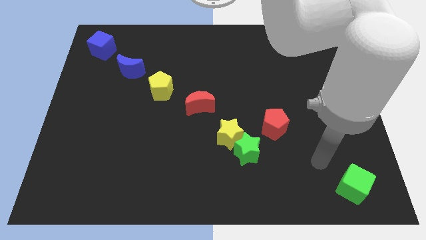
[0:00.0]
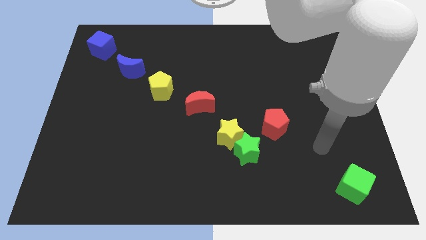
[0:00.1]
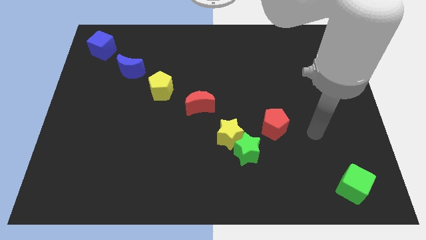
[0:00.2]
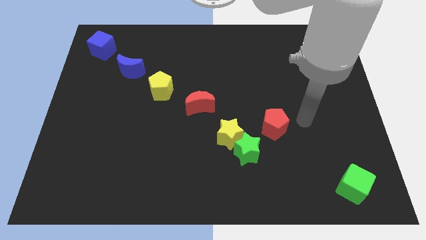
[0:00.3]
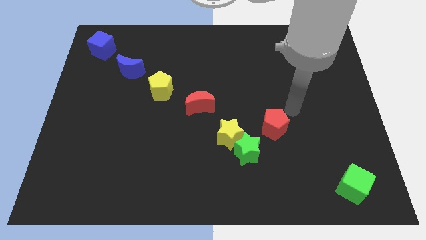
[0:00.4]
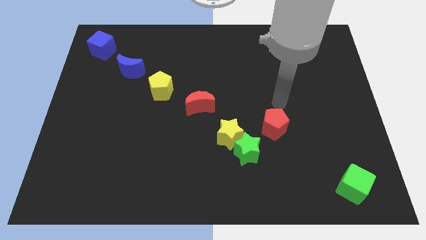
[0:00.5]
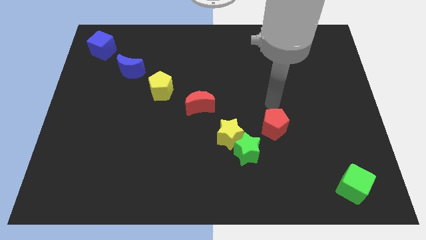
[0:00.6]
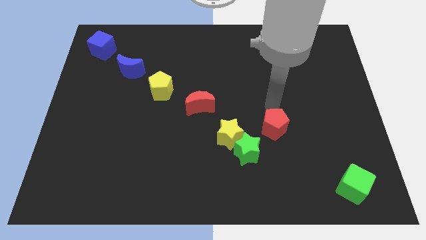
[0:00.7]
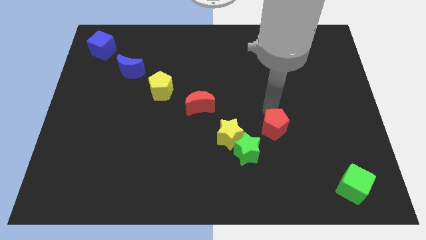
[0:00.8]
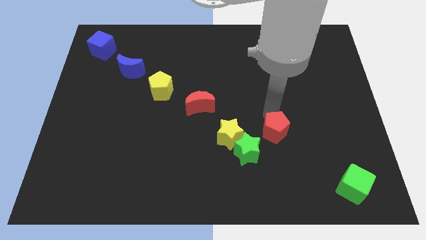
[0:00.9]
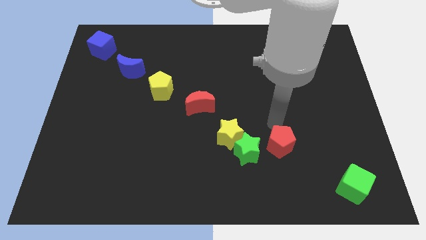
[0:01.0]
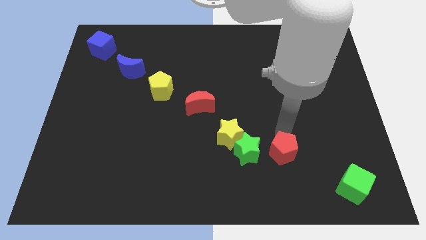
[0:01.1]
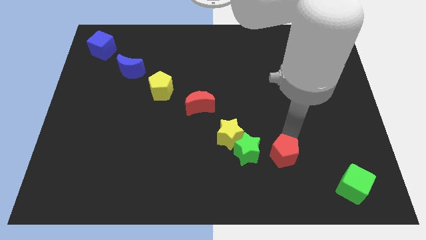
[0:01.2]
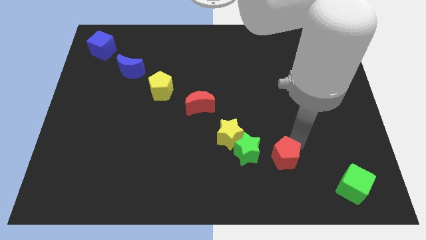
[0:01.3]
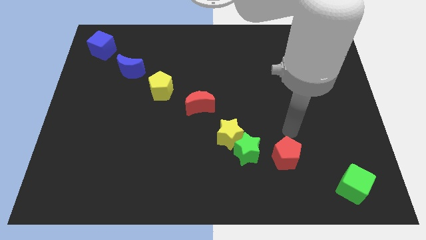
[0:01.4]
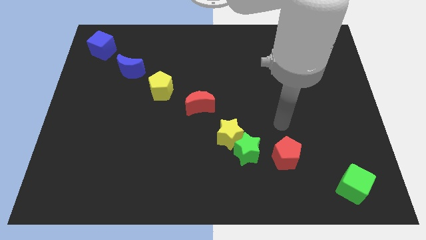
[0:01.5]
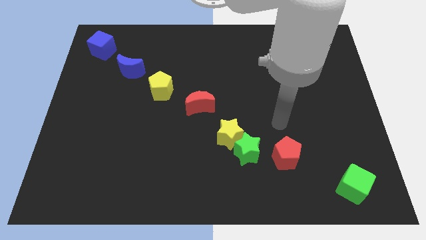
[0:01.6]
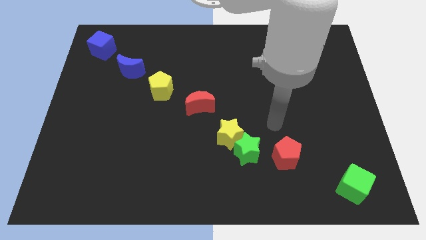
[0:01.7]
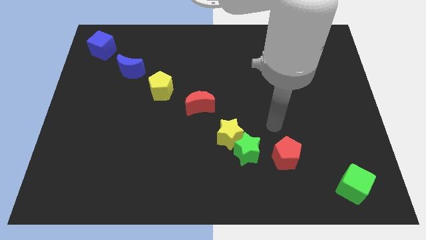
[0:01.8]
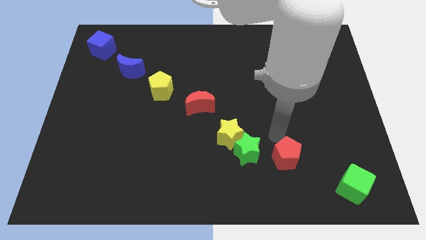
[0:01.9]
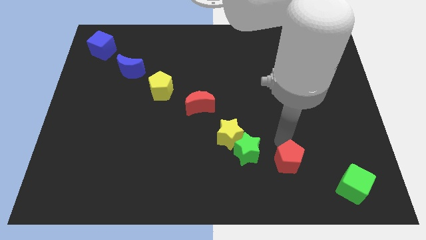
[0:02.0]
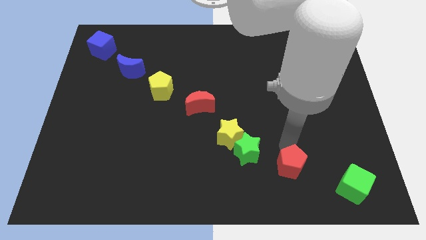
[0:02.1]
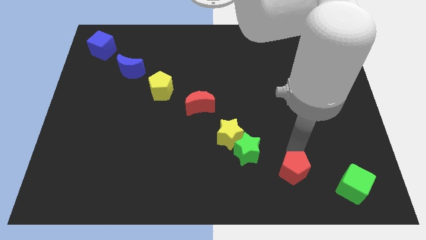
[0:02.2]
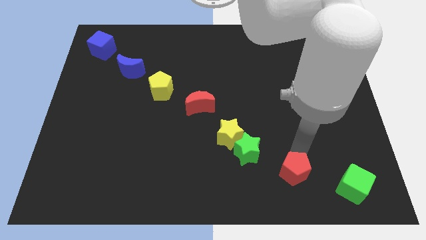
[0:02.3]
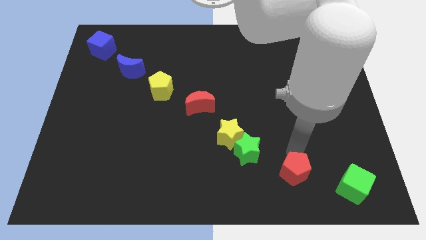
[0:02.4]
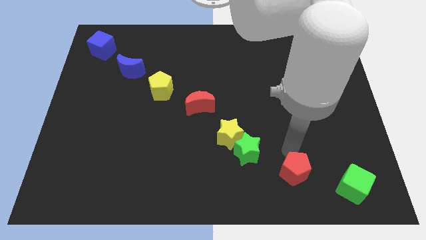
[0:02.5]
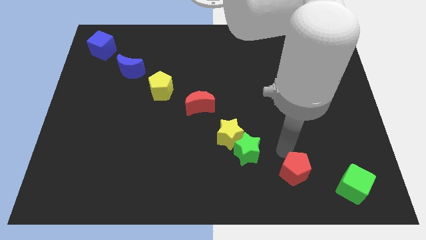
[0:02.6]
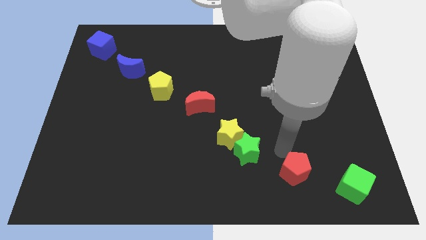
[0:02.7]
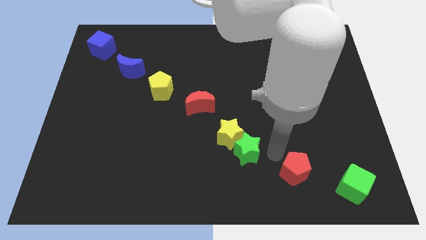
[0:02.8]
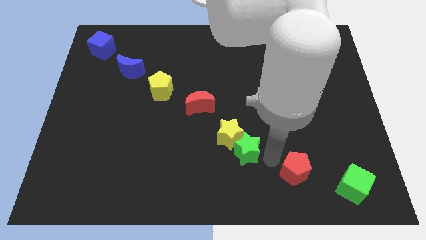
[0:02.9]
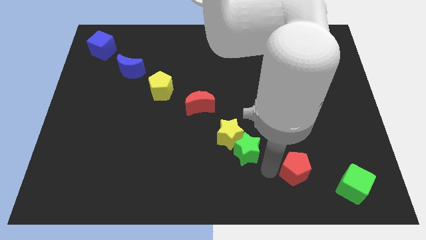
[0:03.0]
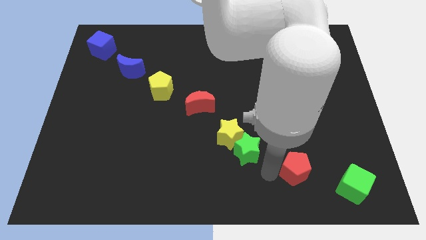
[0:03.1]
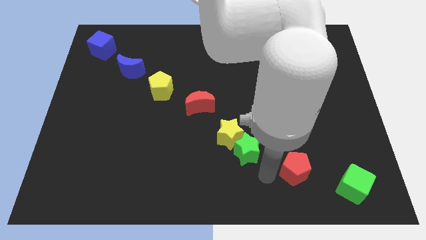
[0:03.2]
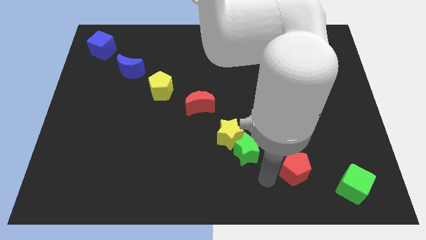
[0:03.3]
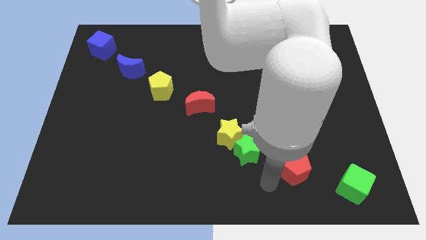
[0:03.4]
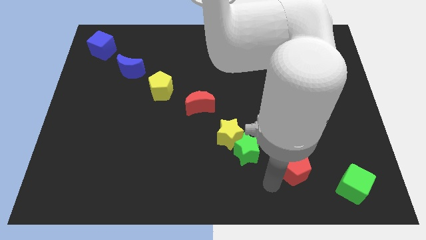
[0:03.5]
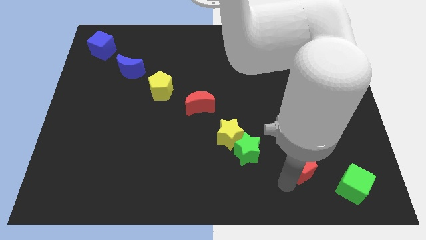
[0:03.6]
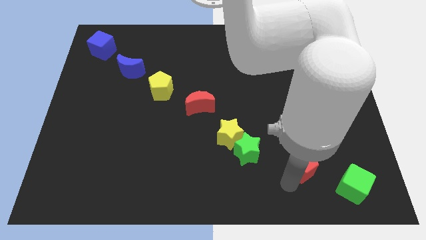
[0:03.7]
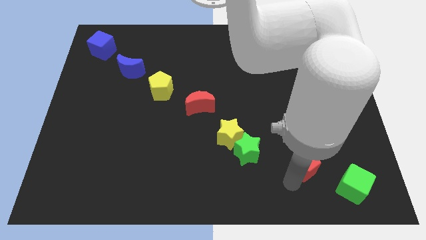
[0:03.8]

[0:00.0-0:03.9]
place red pentagon diagonally left to green cube

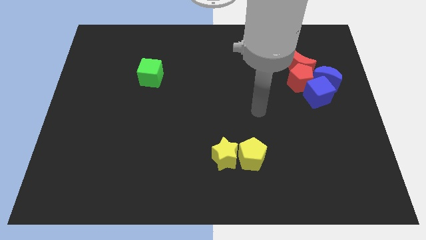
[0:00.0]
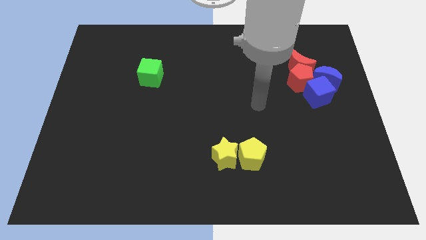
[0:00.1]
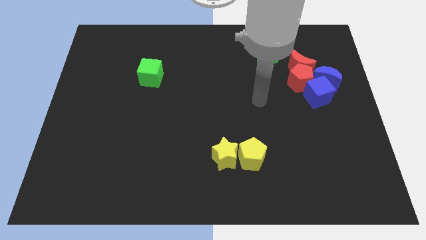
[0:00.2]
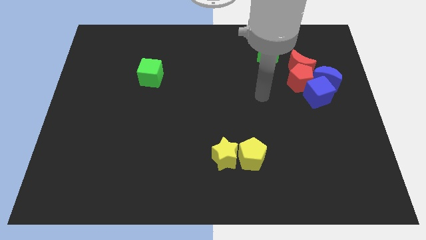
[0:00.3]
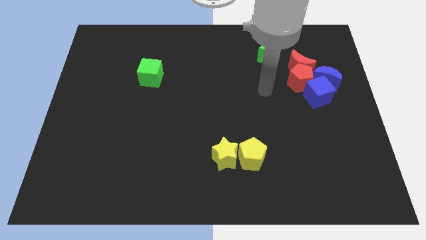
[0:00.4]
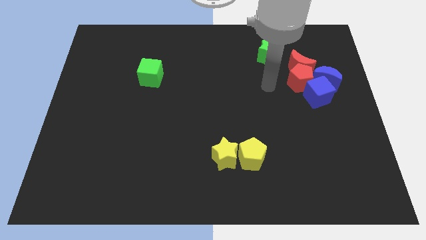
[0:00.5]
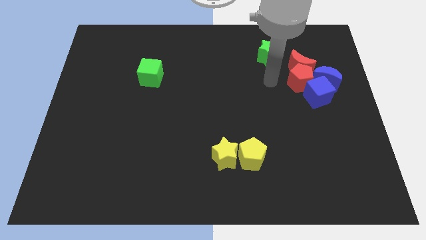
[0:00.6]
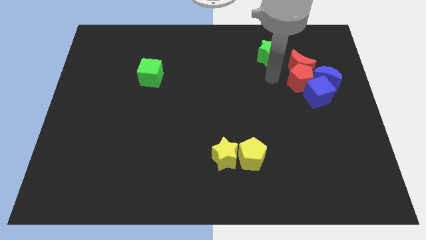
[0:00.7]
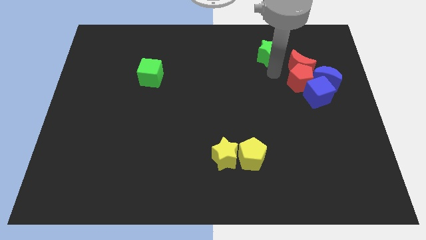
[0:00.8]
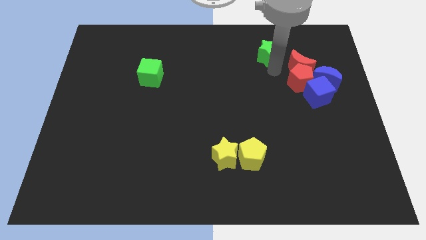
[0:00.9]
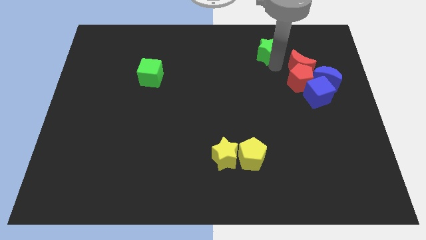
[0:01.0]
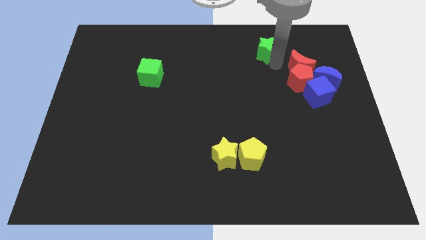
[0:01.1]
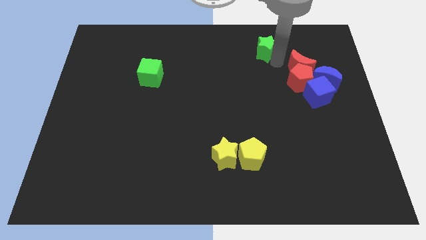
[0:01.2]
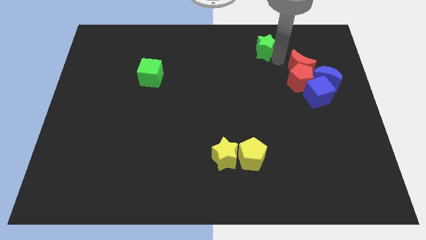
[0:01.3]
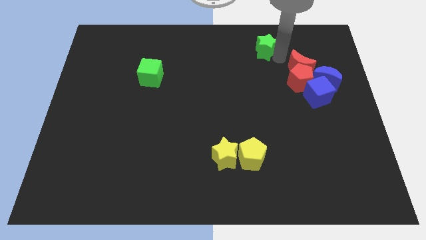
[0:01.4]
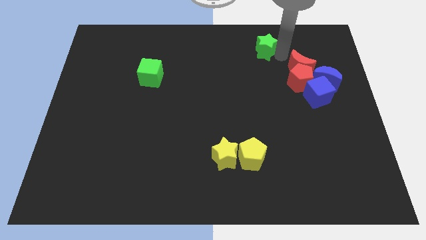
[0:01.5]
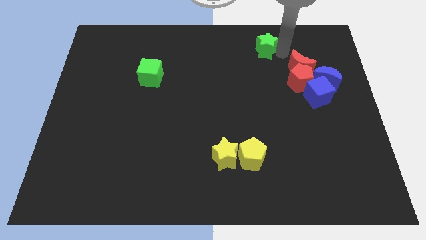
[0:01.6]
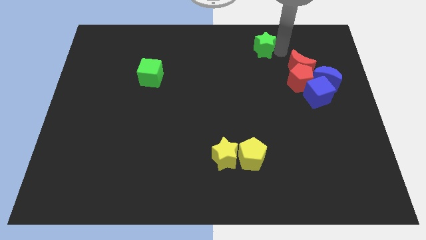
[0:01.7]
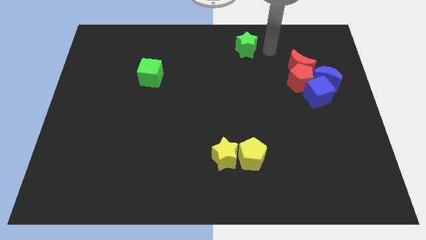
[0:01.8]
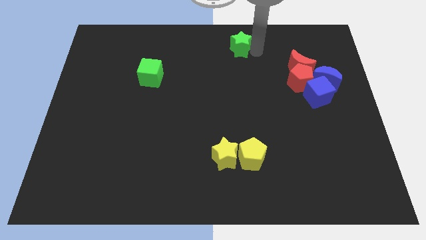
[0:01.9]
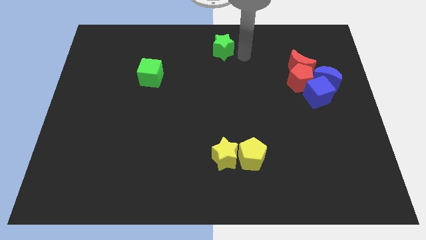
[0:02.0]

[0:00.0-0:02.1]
move green star to the top center

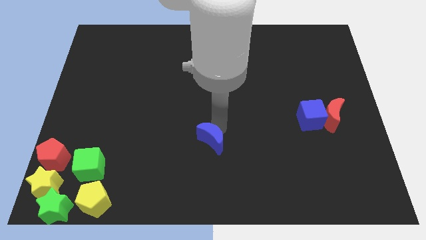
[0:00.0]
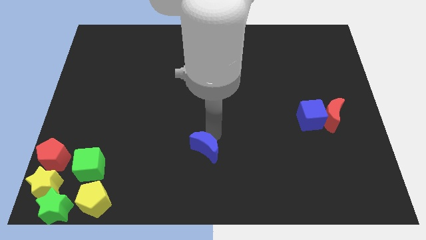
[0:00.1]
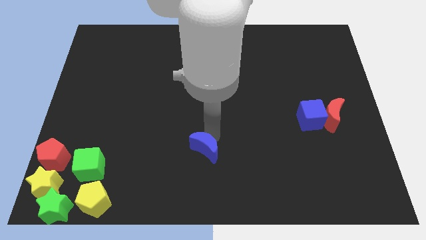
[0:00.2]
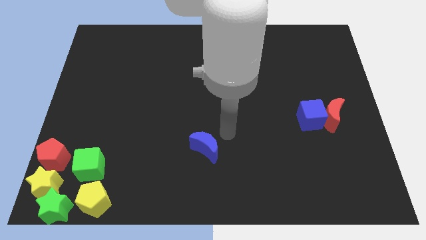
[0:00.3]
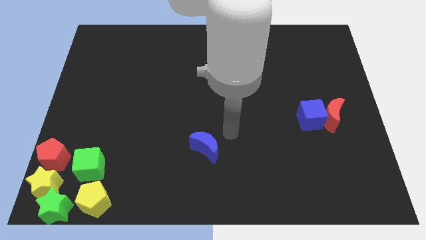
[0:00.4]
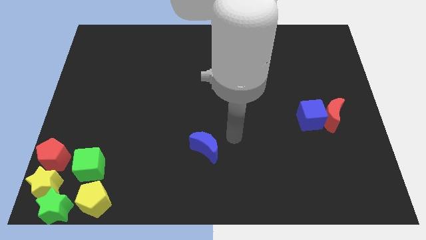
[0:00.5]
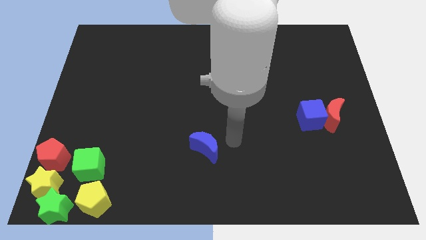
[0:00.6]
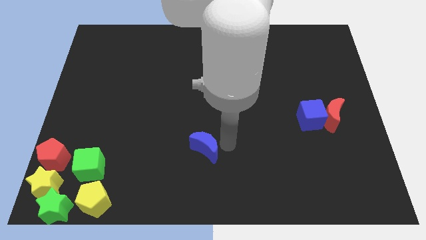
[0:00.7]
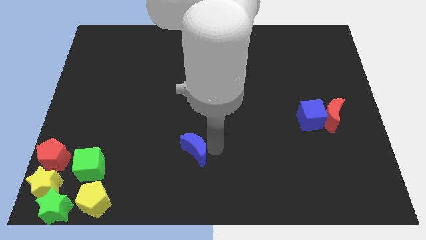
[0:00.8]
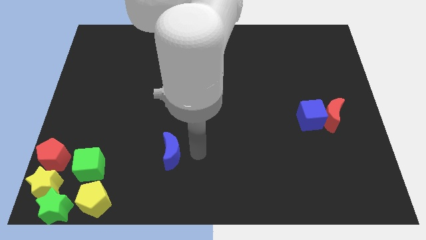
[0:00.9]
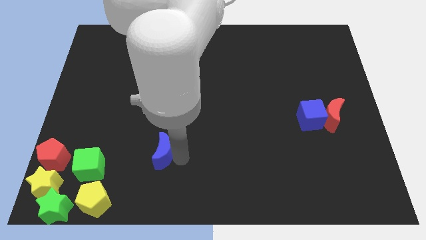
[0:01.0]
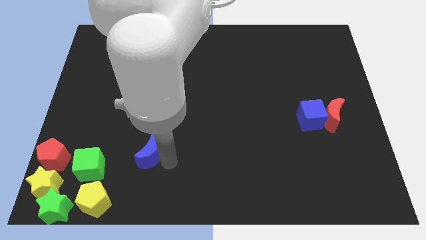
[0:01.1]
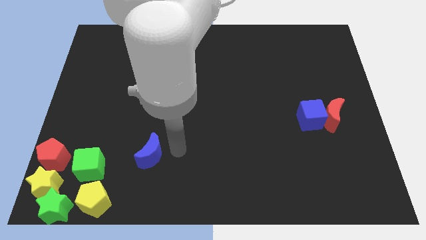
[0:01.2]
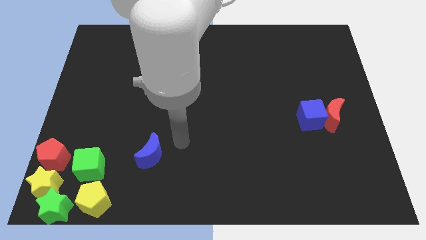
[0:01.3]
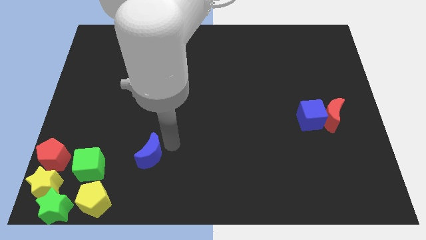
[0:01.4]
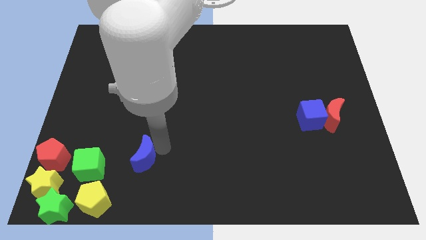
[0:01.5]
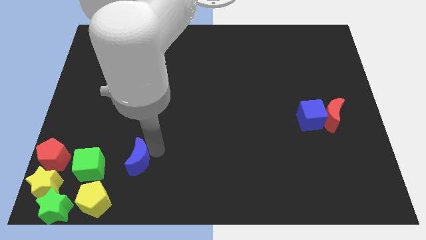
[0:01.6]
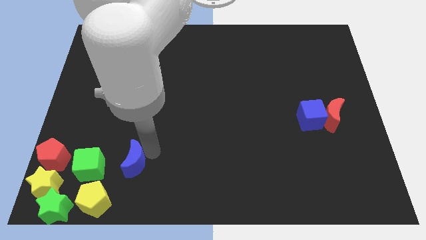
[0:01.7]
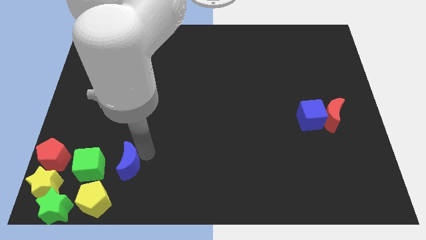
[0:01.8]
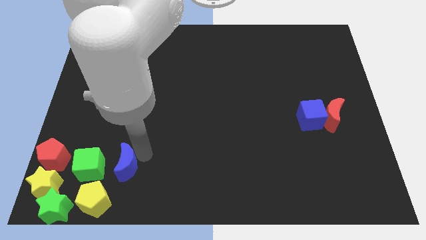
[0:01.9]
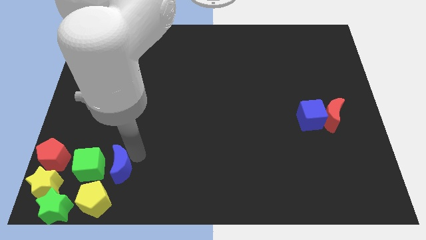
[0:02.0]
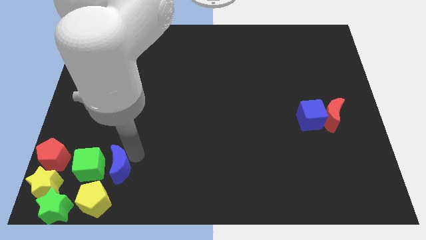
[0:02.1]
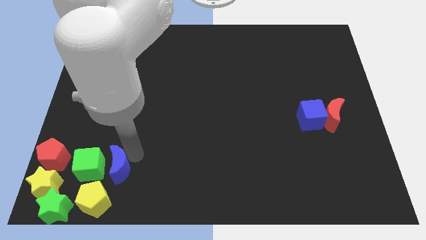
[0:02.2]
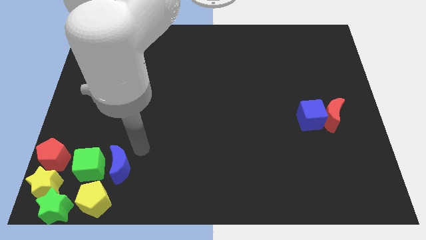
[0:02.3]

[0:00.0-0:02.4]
put the blue moon to the right of the green cube

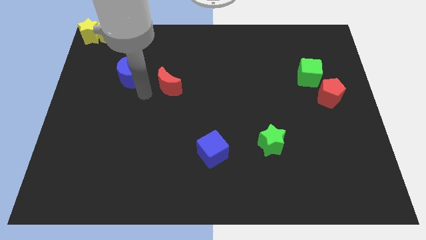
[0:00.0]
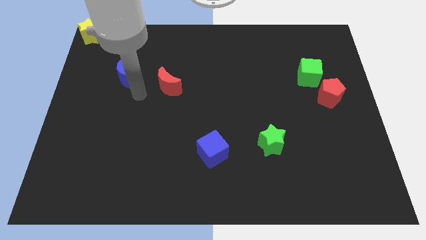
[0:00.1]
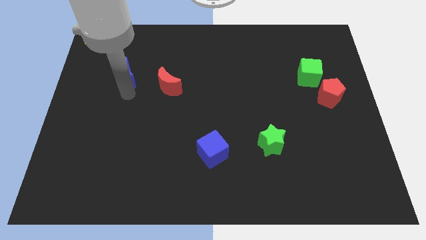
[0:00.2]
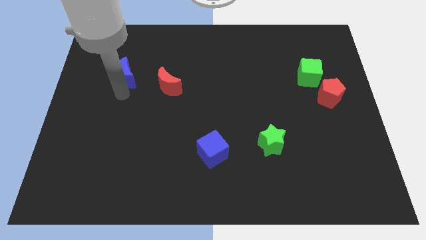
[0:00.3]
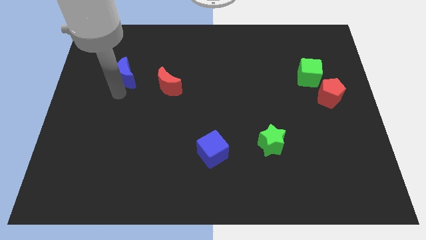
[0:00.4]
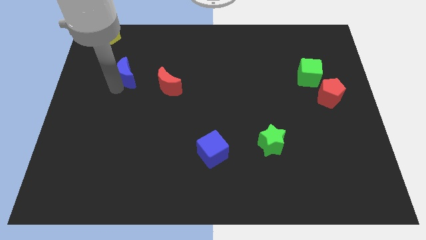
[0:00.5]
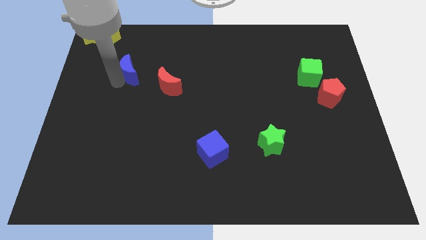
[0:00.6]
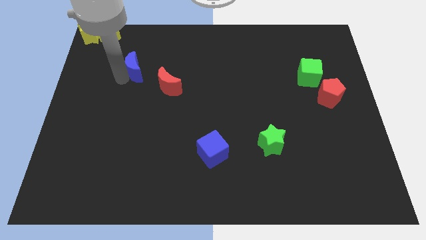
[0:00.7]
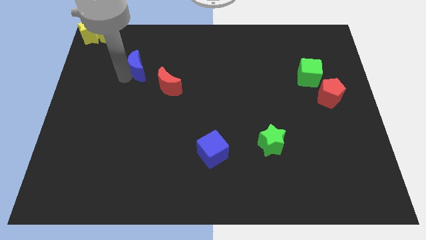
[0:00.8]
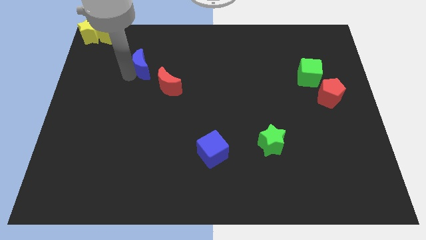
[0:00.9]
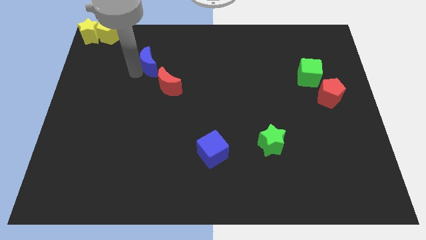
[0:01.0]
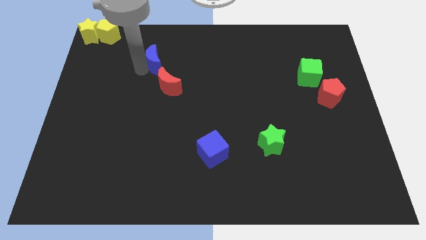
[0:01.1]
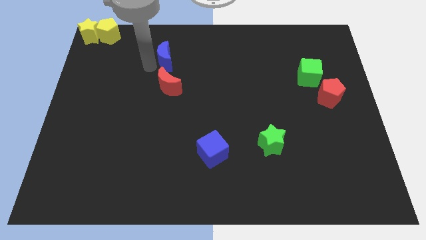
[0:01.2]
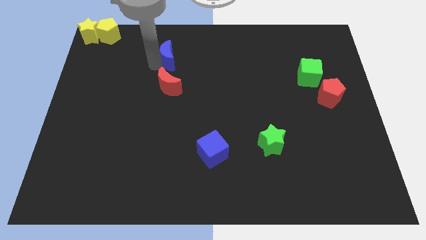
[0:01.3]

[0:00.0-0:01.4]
move the blue crescent to the top of the red crescent
